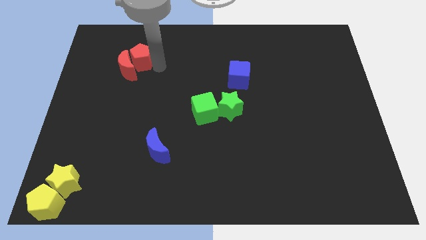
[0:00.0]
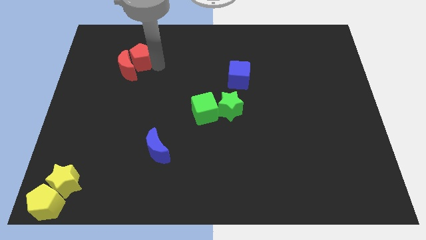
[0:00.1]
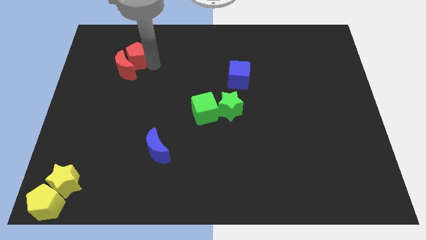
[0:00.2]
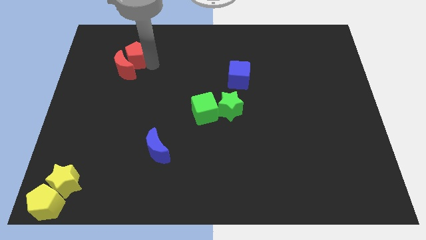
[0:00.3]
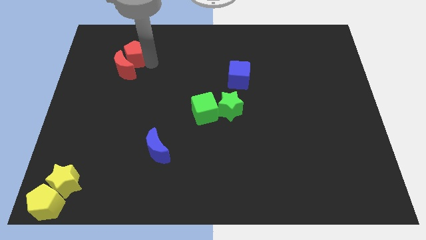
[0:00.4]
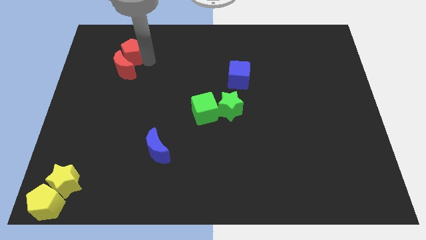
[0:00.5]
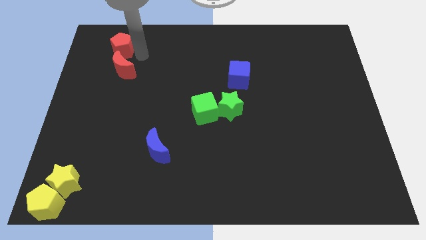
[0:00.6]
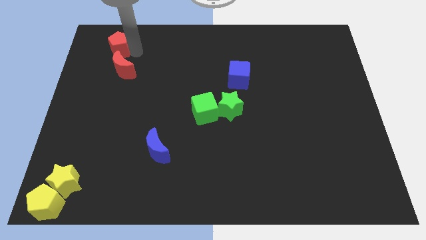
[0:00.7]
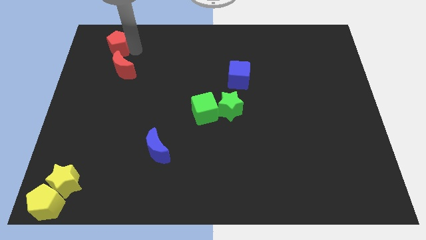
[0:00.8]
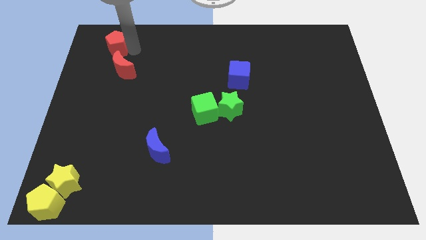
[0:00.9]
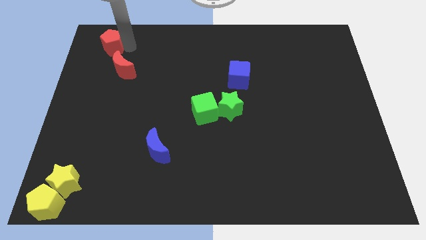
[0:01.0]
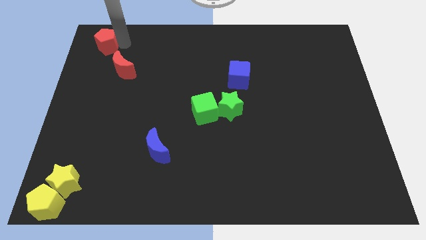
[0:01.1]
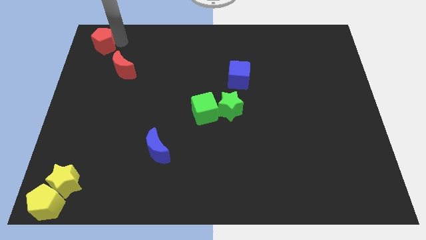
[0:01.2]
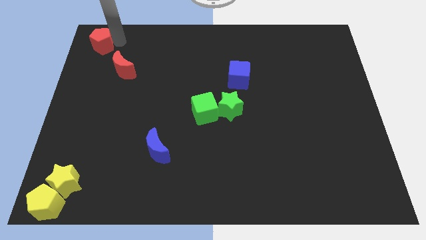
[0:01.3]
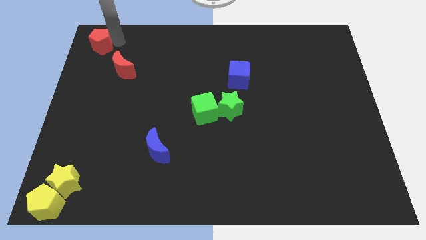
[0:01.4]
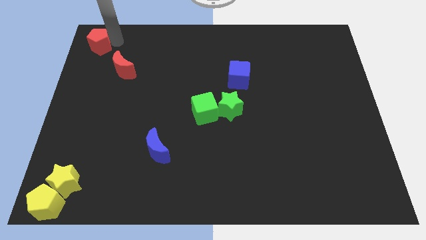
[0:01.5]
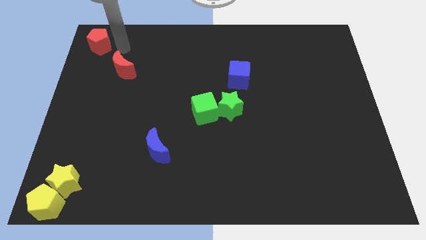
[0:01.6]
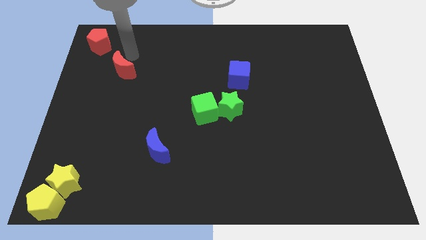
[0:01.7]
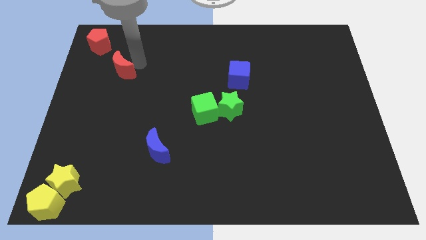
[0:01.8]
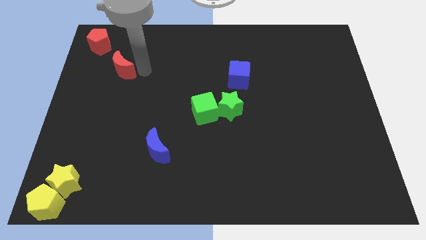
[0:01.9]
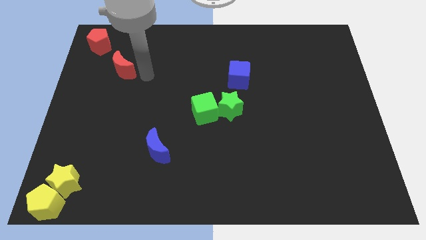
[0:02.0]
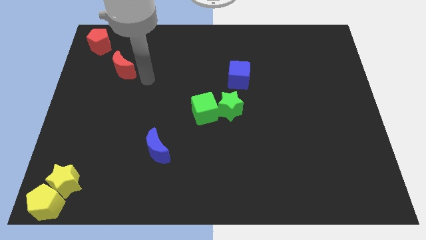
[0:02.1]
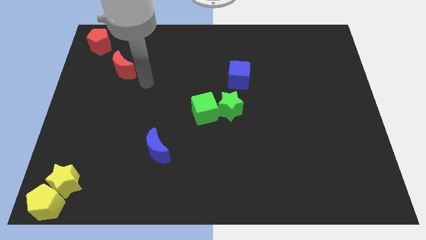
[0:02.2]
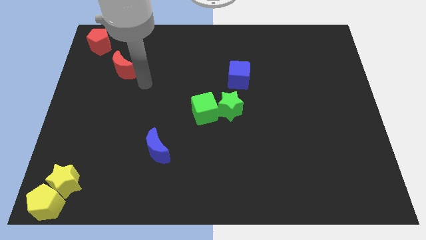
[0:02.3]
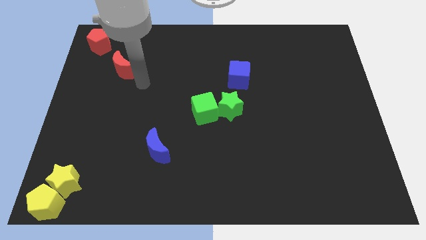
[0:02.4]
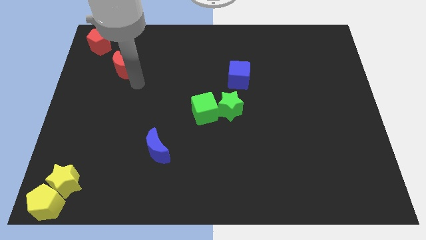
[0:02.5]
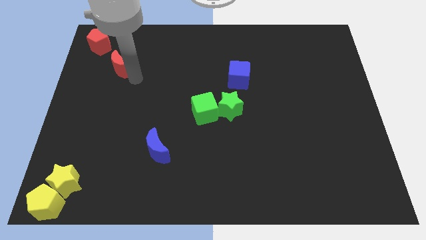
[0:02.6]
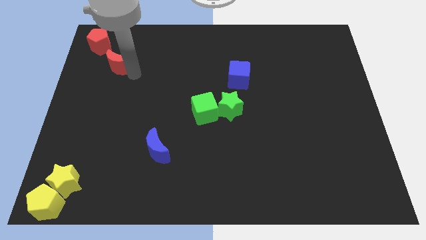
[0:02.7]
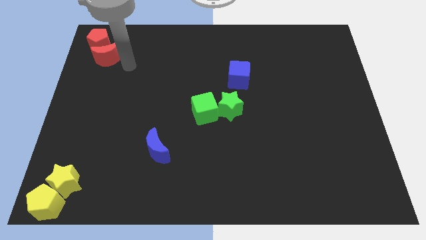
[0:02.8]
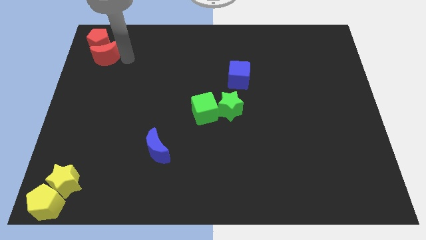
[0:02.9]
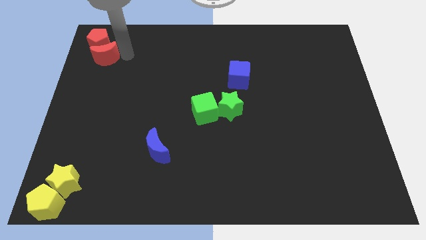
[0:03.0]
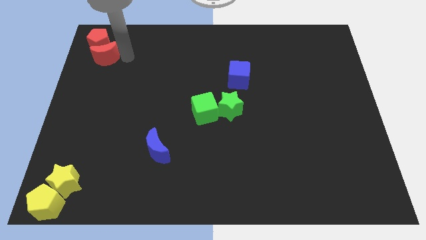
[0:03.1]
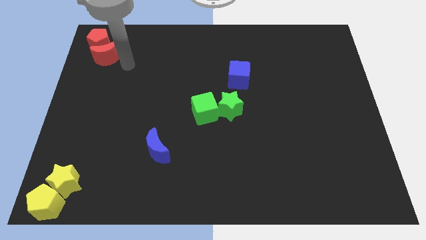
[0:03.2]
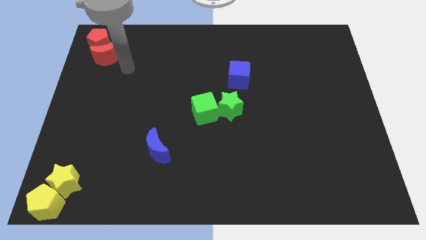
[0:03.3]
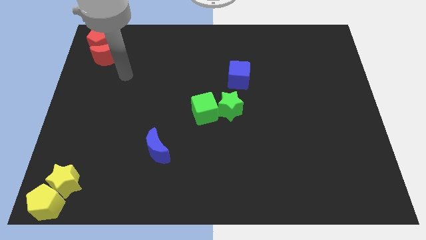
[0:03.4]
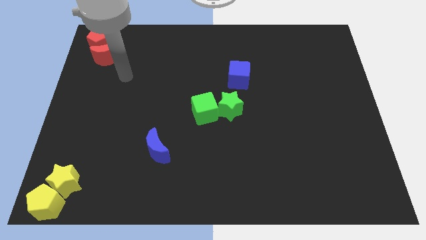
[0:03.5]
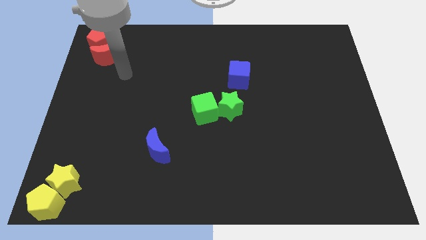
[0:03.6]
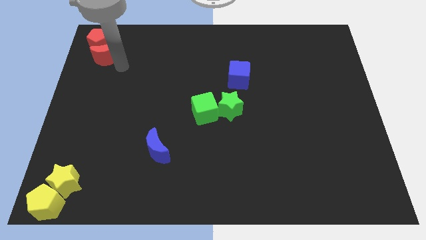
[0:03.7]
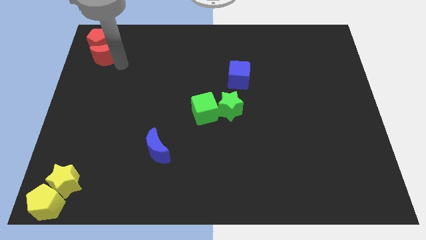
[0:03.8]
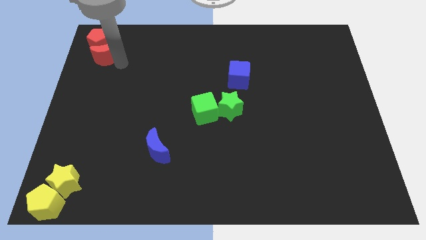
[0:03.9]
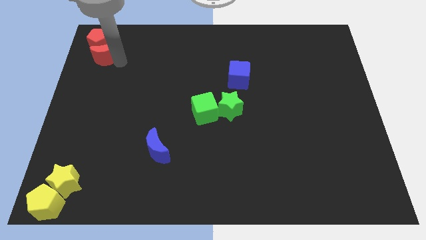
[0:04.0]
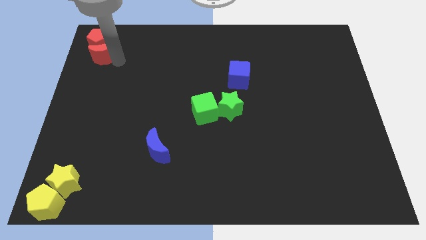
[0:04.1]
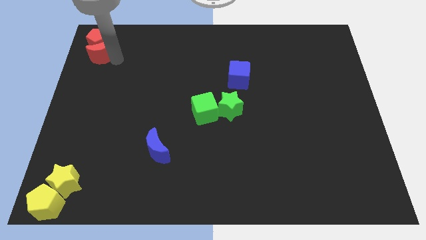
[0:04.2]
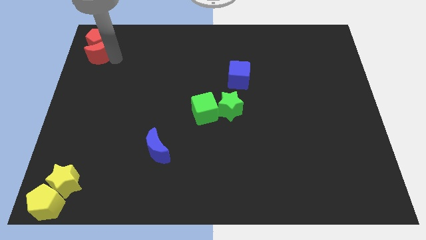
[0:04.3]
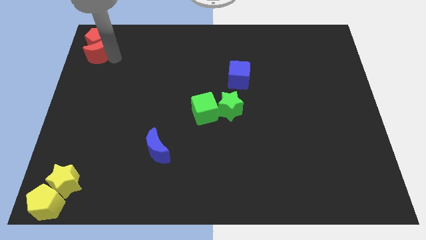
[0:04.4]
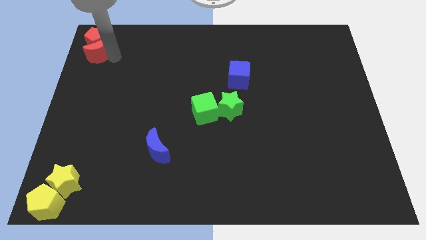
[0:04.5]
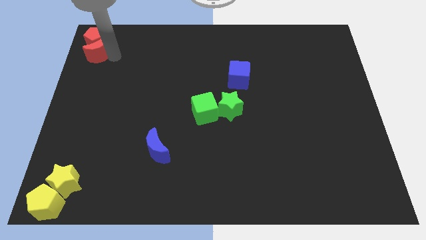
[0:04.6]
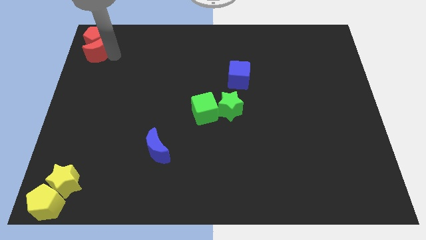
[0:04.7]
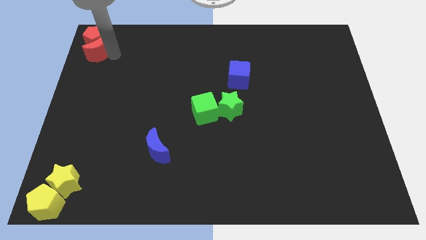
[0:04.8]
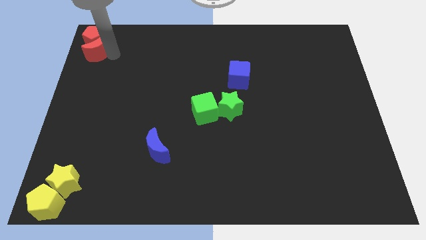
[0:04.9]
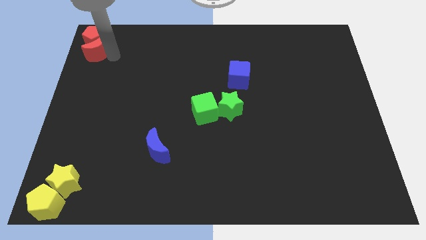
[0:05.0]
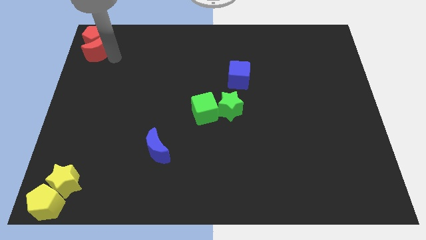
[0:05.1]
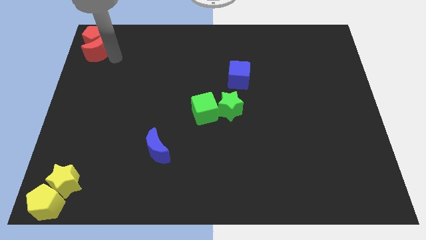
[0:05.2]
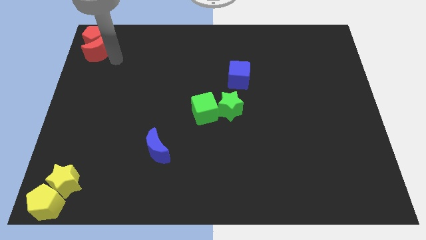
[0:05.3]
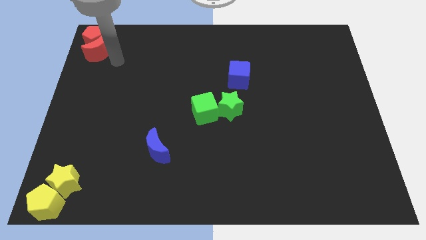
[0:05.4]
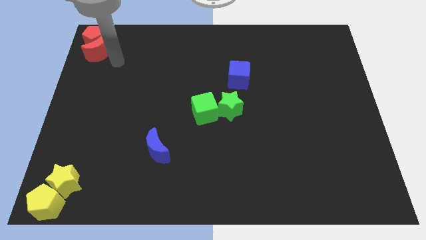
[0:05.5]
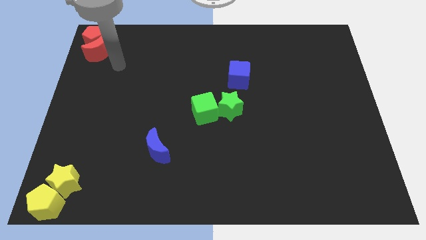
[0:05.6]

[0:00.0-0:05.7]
place the red pentagon and red moon to the top left of the board

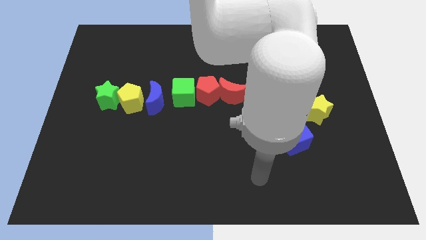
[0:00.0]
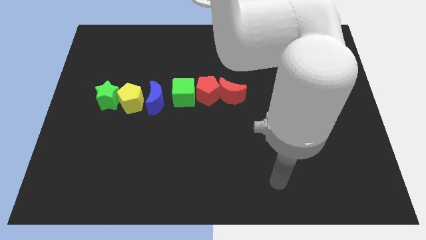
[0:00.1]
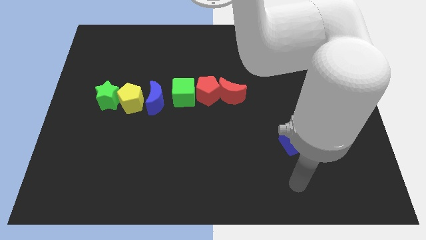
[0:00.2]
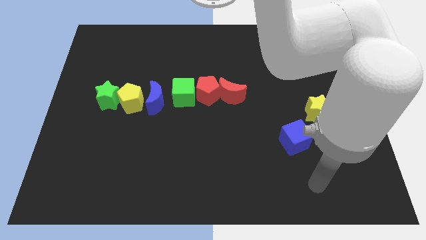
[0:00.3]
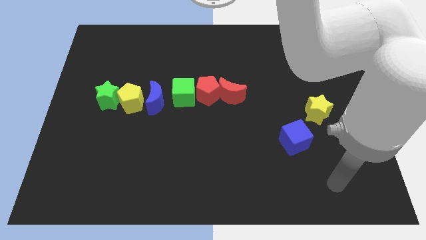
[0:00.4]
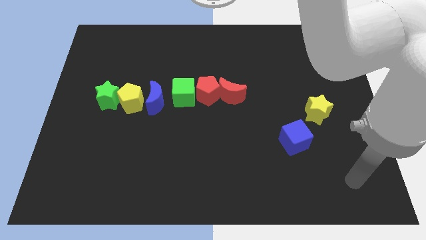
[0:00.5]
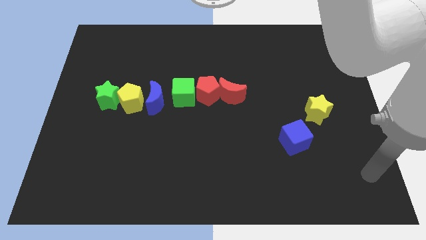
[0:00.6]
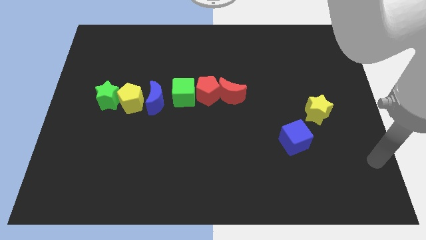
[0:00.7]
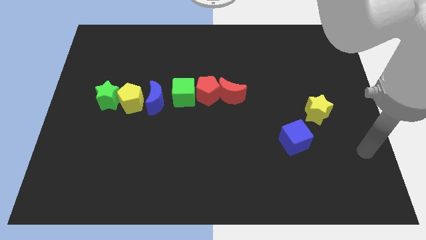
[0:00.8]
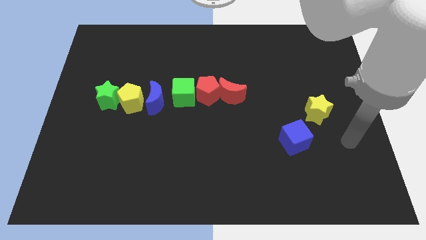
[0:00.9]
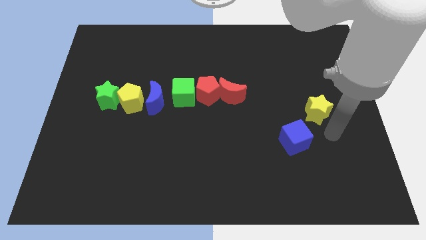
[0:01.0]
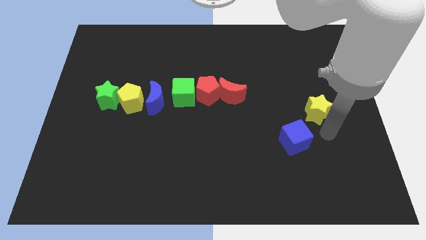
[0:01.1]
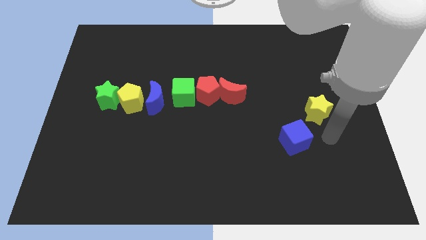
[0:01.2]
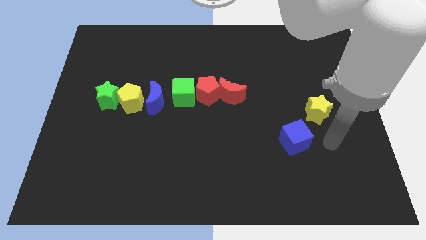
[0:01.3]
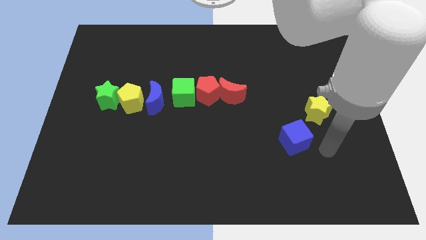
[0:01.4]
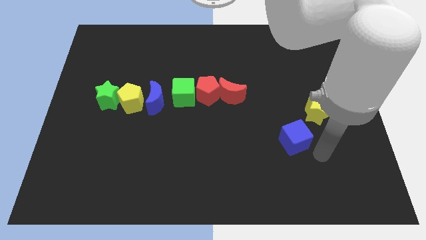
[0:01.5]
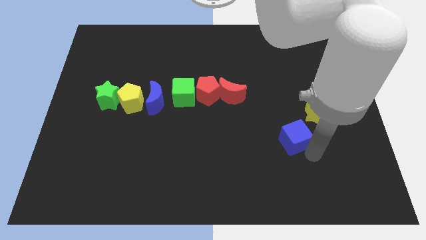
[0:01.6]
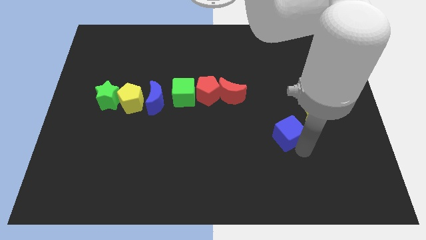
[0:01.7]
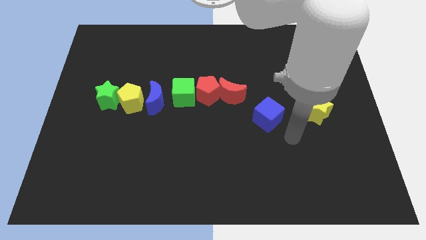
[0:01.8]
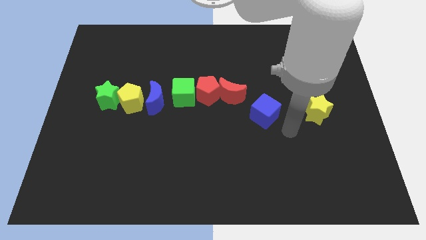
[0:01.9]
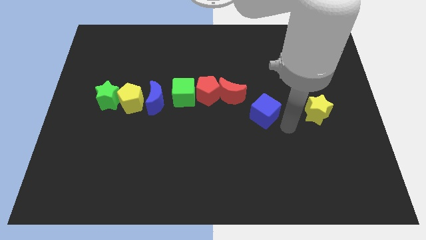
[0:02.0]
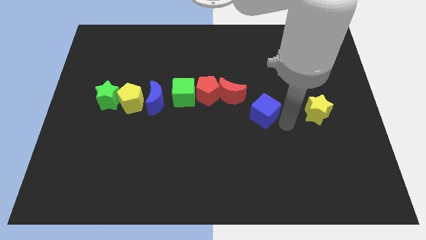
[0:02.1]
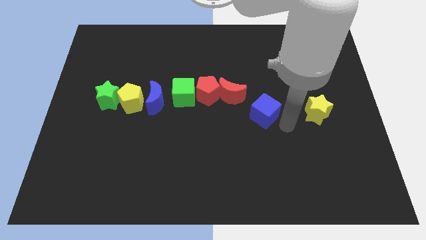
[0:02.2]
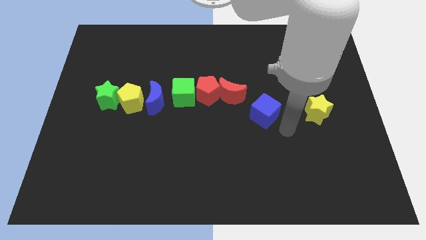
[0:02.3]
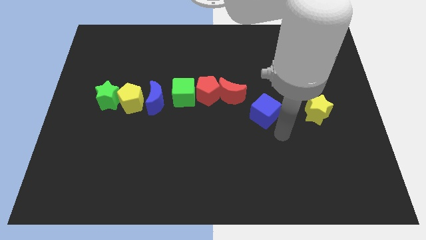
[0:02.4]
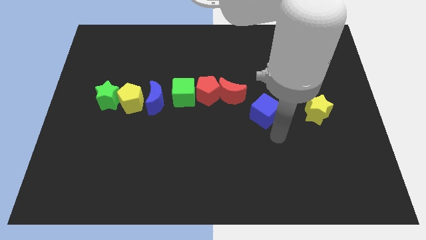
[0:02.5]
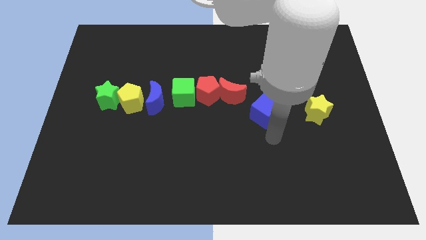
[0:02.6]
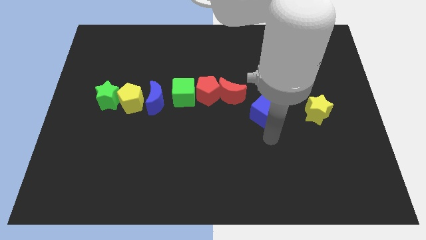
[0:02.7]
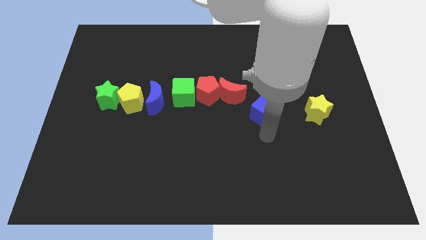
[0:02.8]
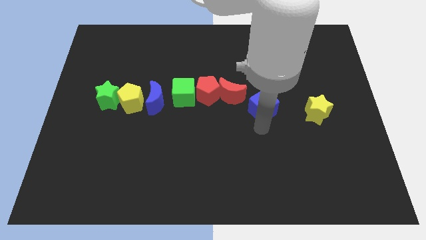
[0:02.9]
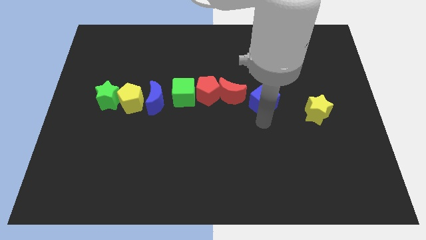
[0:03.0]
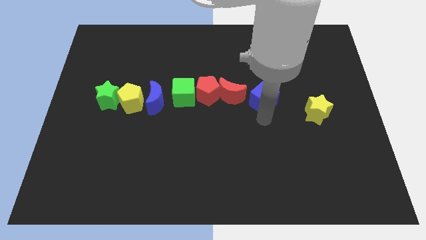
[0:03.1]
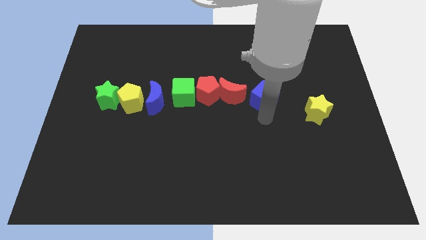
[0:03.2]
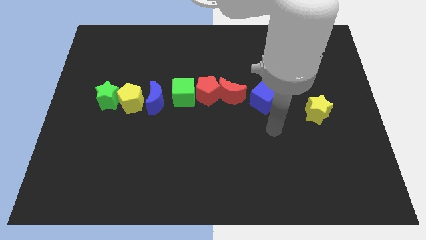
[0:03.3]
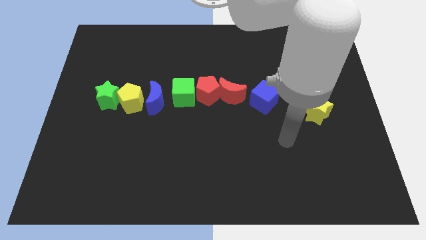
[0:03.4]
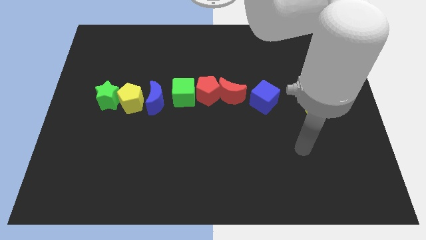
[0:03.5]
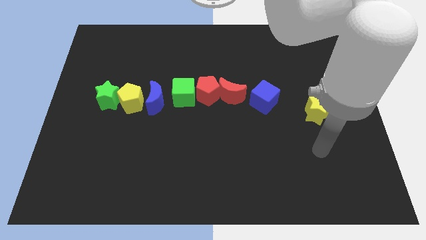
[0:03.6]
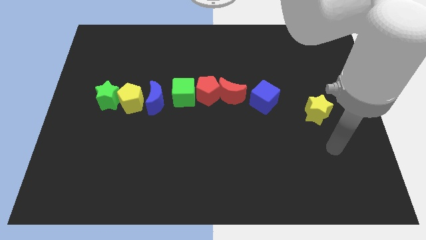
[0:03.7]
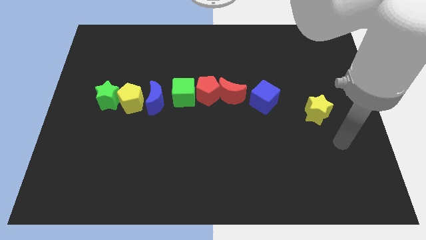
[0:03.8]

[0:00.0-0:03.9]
move blue cube between red crescent and yellow star
